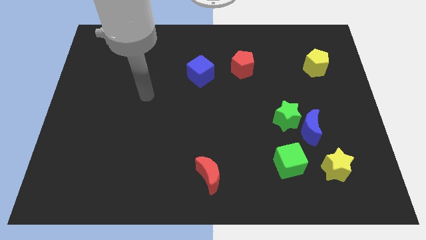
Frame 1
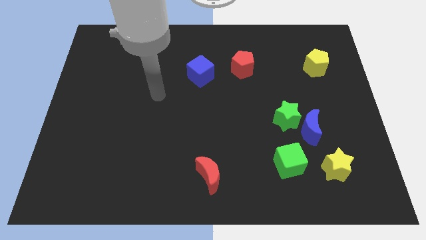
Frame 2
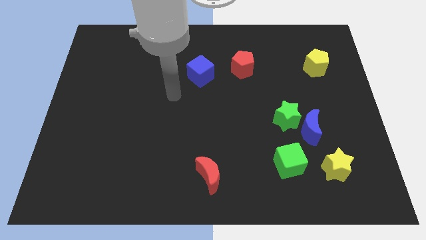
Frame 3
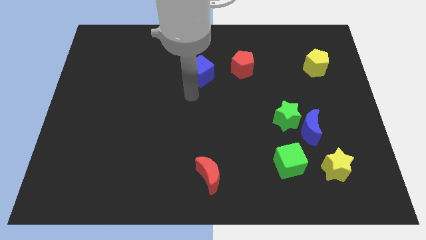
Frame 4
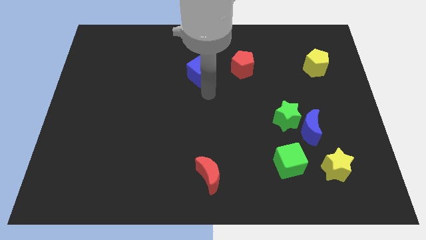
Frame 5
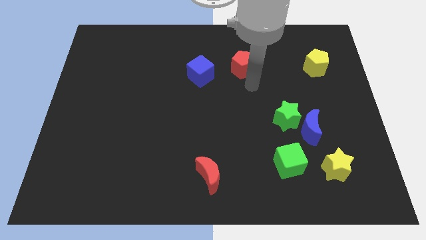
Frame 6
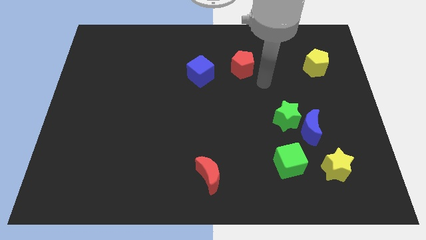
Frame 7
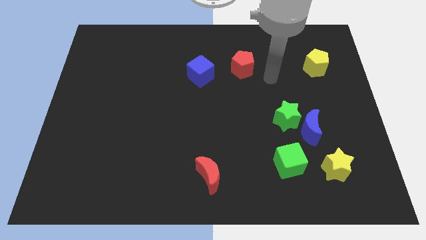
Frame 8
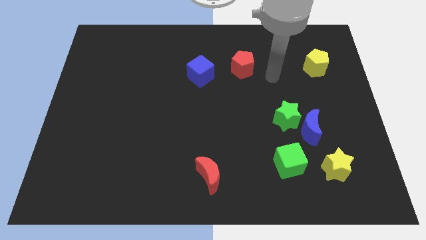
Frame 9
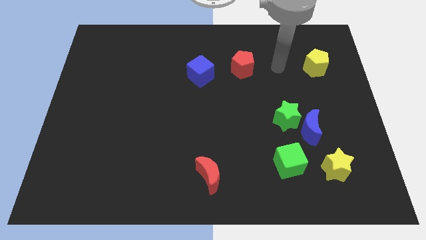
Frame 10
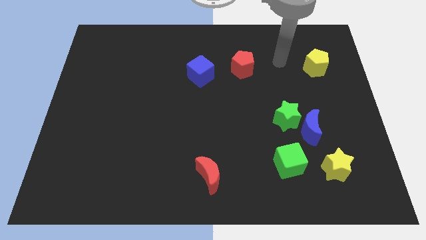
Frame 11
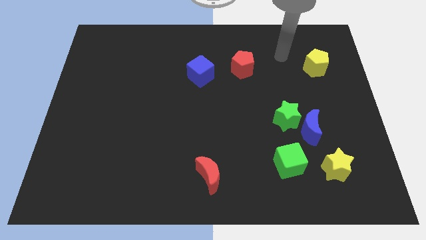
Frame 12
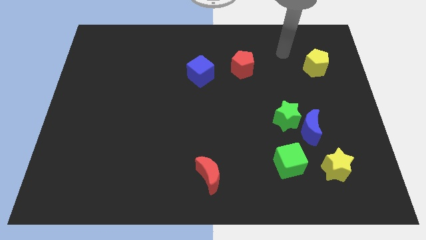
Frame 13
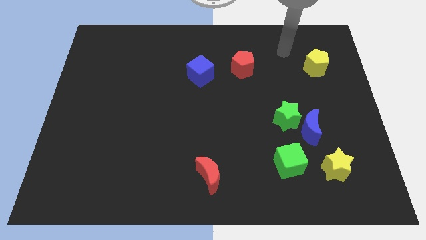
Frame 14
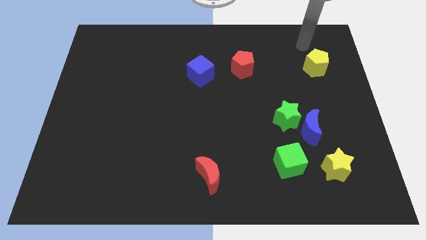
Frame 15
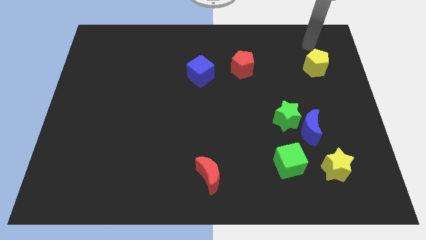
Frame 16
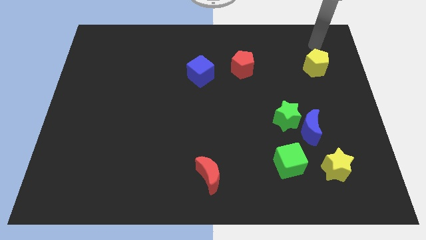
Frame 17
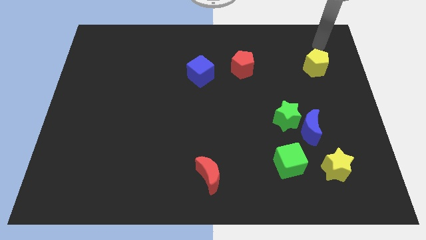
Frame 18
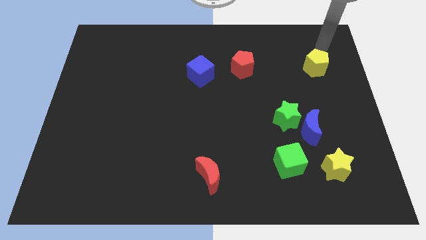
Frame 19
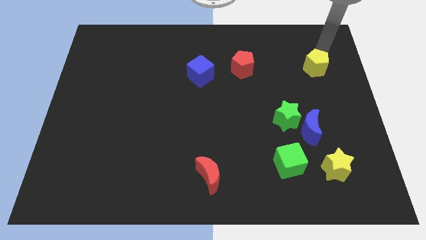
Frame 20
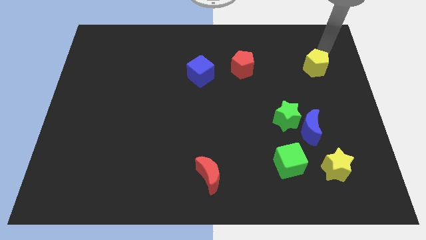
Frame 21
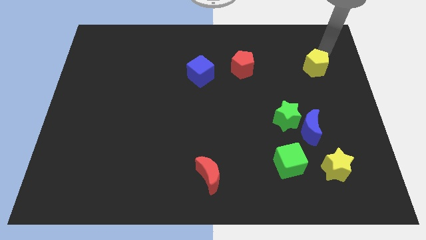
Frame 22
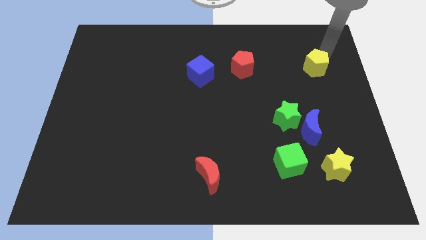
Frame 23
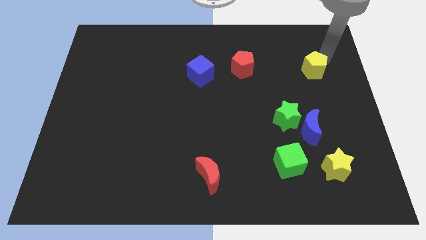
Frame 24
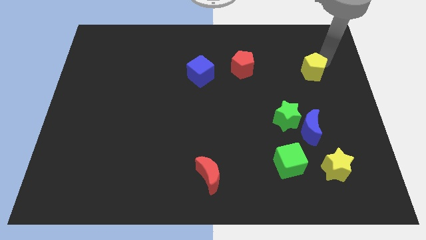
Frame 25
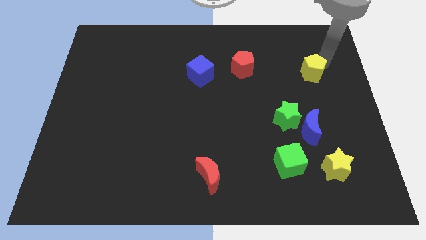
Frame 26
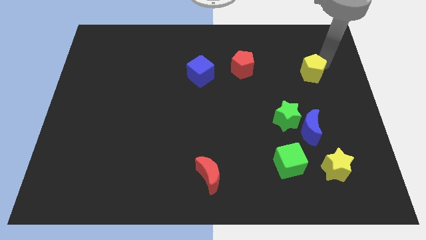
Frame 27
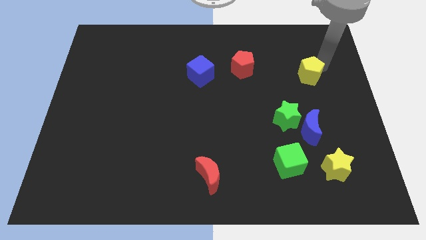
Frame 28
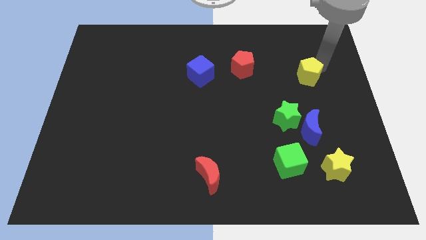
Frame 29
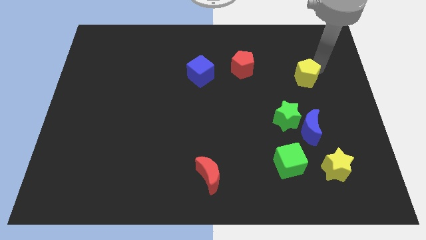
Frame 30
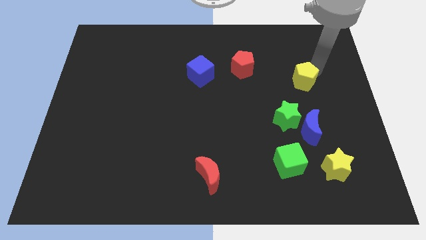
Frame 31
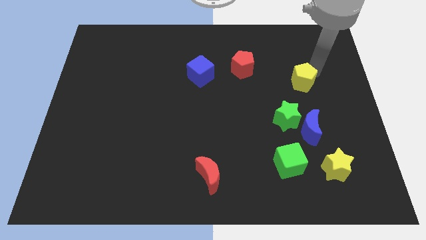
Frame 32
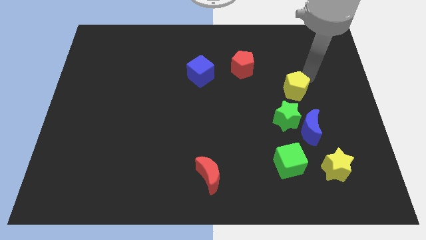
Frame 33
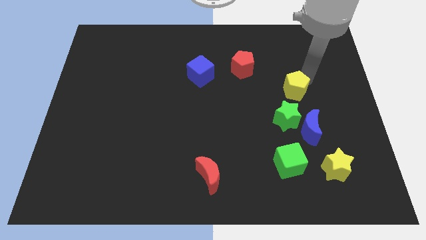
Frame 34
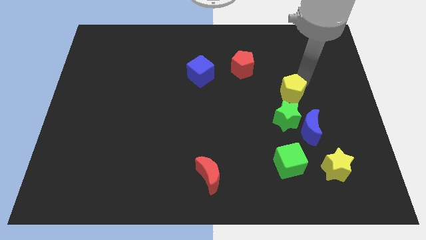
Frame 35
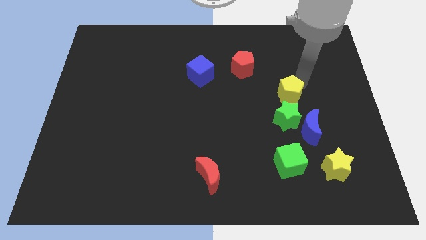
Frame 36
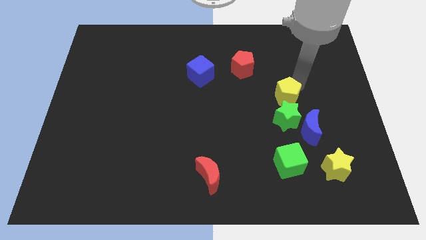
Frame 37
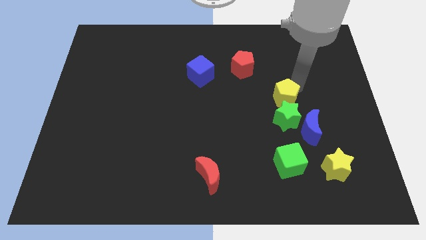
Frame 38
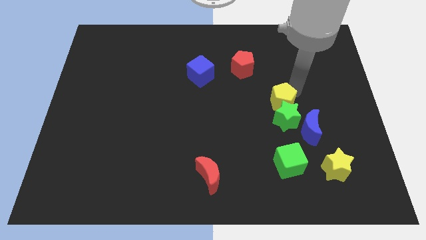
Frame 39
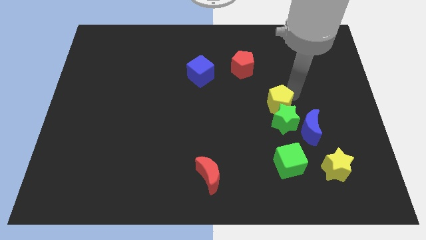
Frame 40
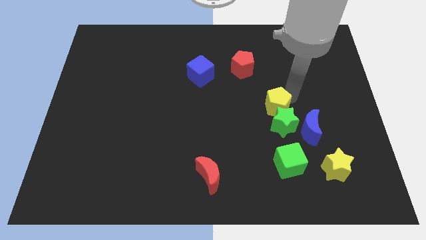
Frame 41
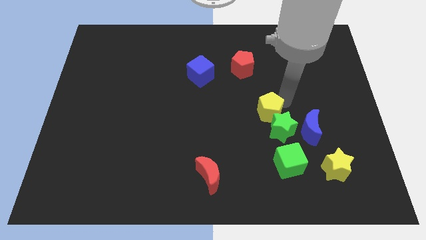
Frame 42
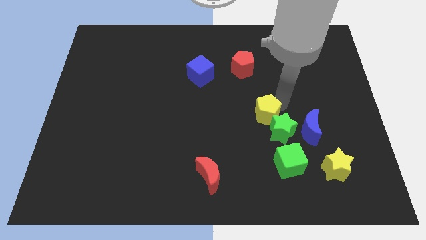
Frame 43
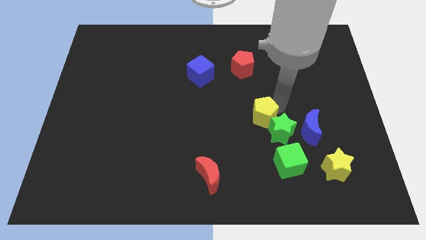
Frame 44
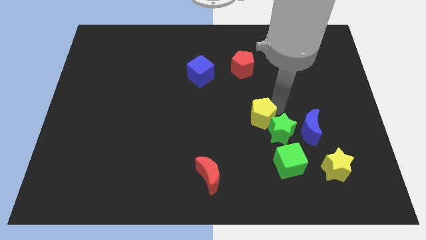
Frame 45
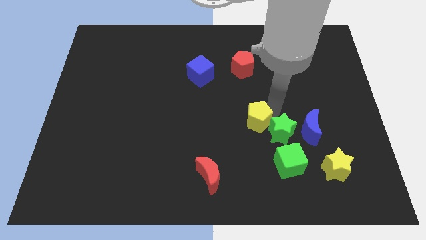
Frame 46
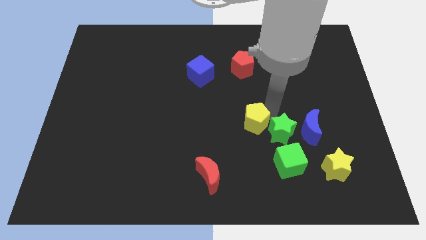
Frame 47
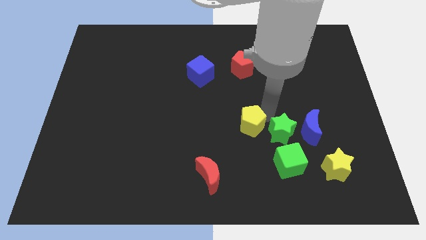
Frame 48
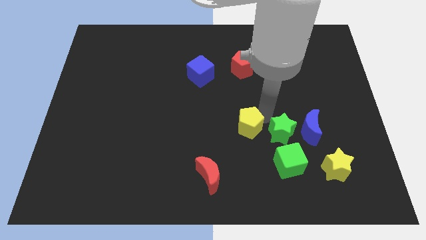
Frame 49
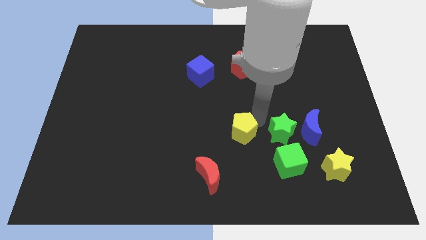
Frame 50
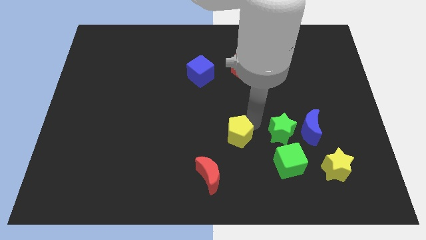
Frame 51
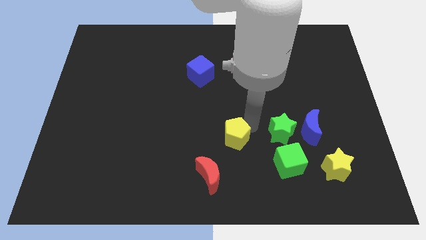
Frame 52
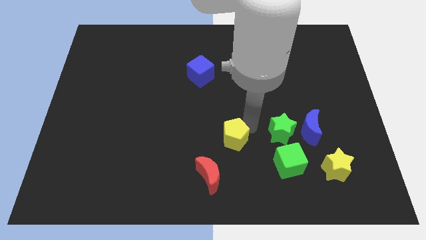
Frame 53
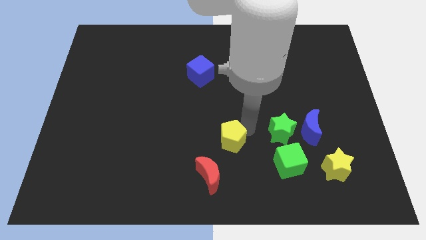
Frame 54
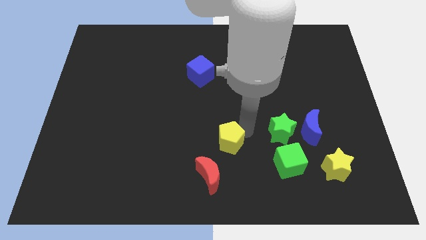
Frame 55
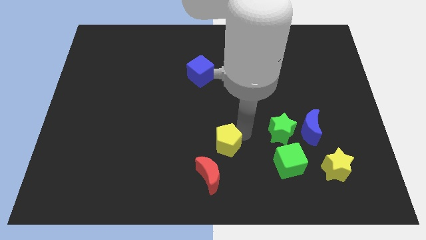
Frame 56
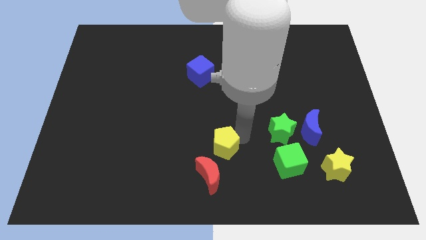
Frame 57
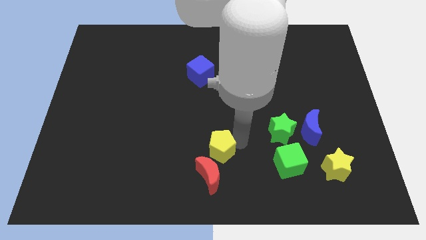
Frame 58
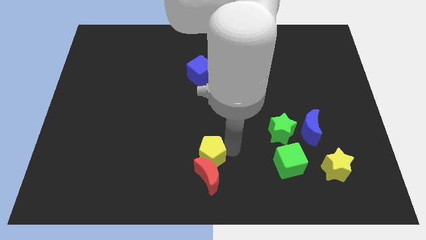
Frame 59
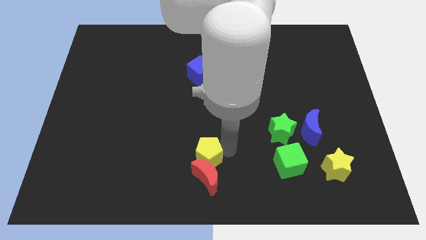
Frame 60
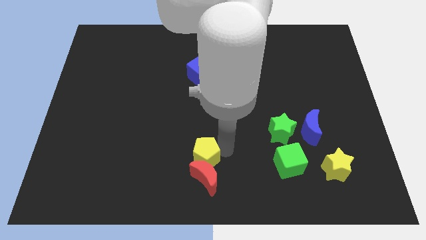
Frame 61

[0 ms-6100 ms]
slide the yellow pentagon to the red moon

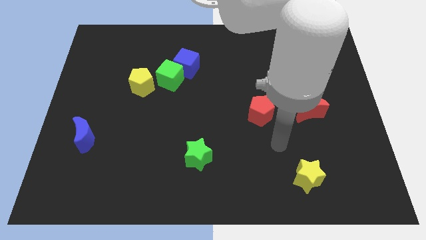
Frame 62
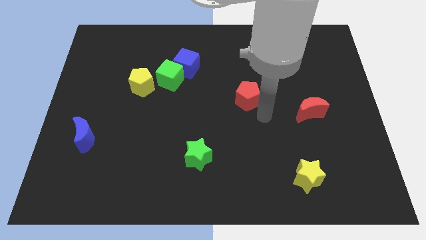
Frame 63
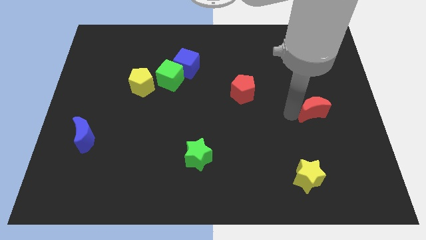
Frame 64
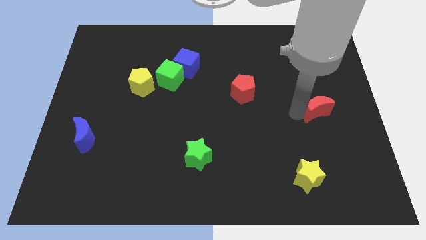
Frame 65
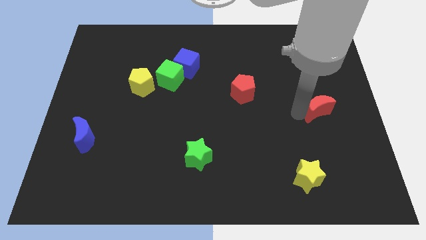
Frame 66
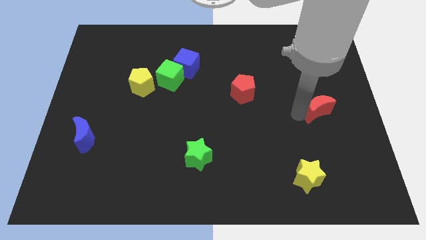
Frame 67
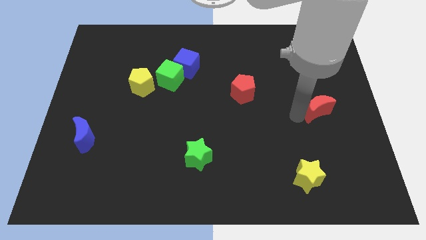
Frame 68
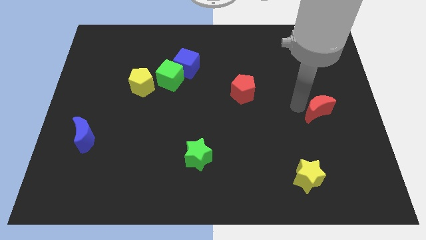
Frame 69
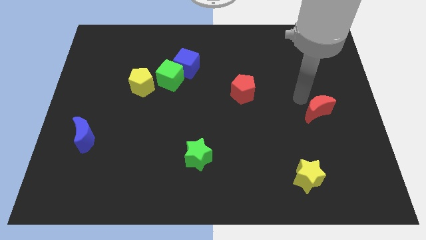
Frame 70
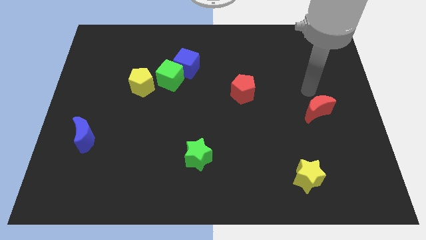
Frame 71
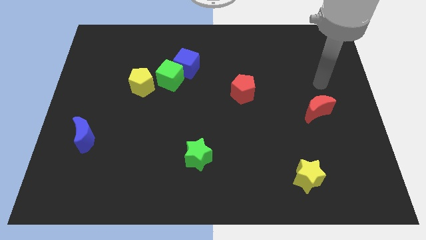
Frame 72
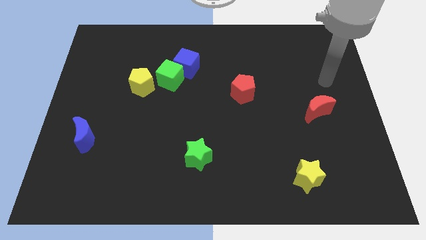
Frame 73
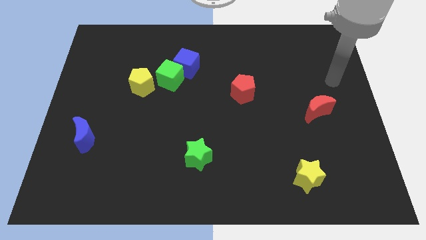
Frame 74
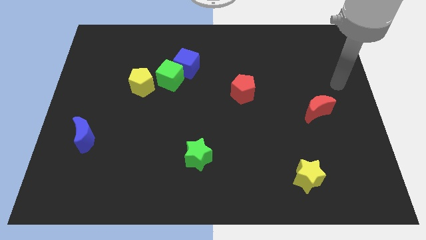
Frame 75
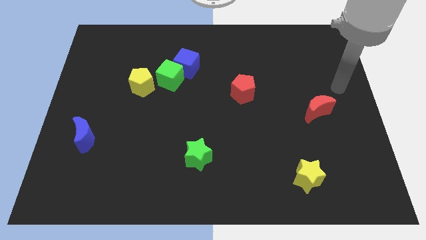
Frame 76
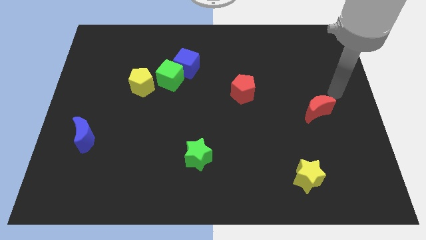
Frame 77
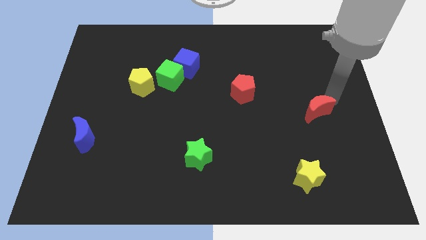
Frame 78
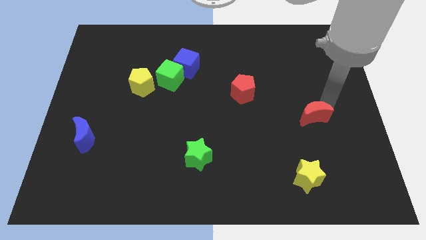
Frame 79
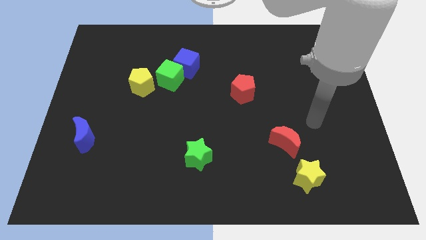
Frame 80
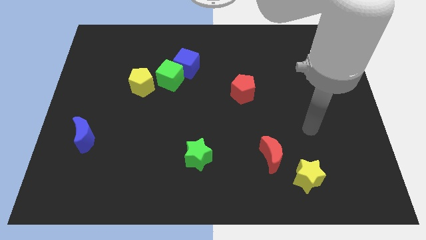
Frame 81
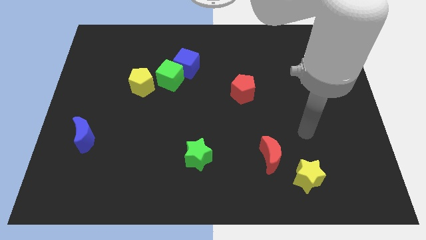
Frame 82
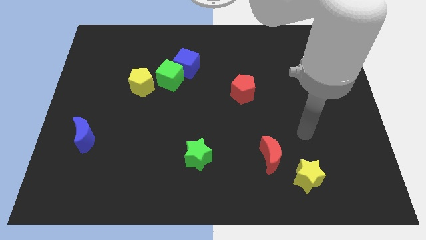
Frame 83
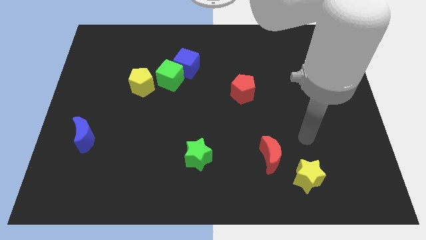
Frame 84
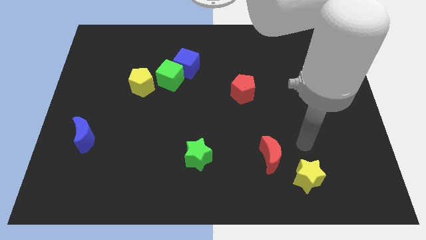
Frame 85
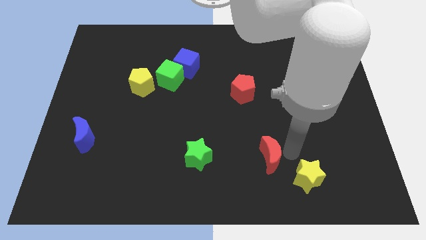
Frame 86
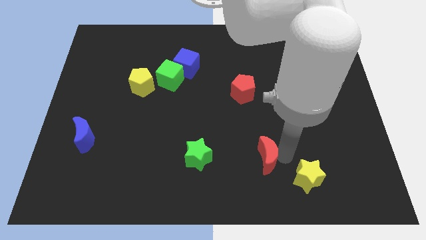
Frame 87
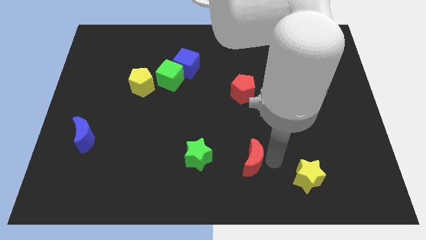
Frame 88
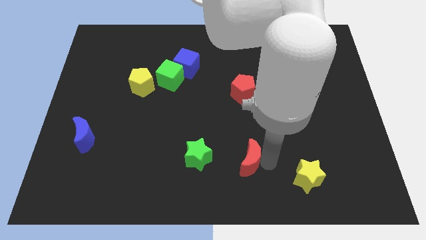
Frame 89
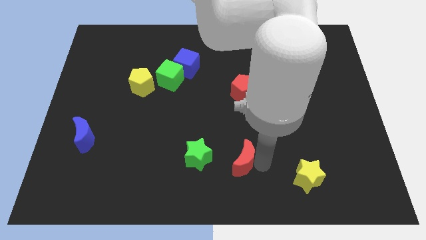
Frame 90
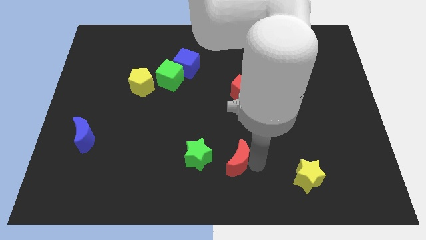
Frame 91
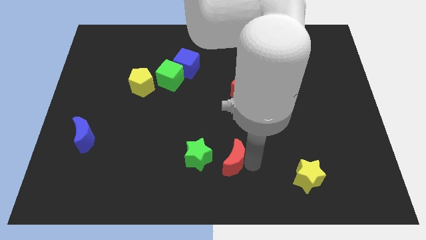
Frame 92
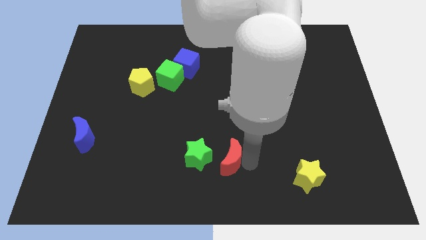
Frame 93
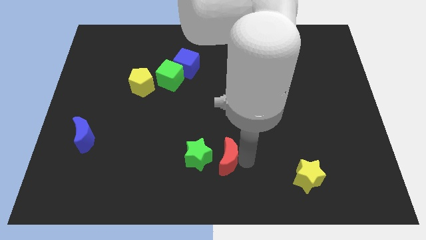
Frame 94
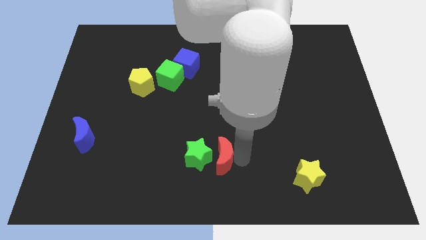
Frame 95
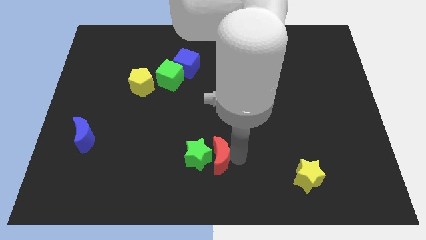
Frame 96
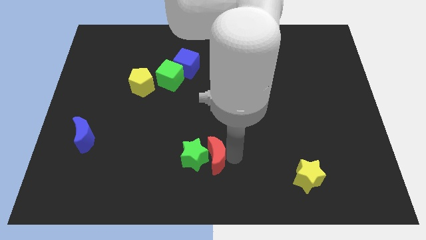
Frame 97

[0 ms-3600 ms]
slide the red moon close to the green star
